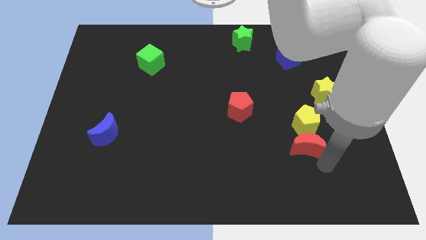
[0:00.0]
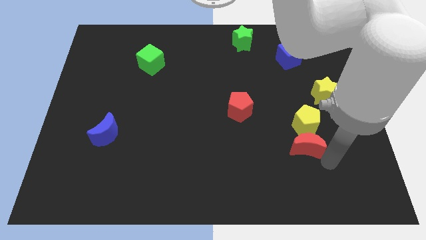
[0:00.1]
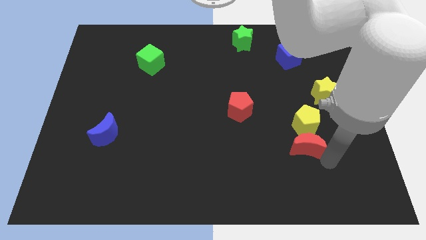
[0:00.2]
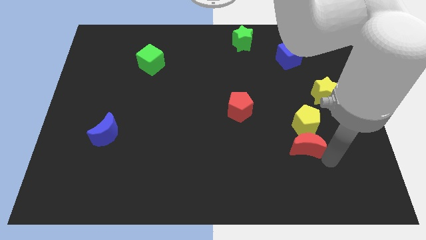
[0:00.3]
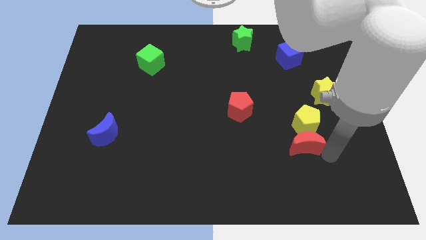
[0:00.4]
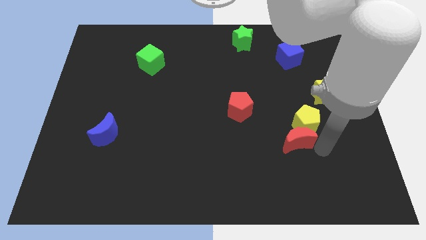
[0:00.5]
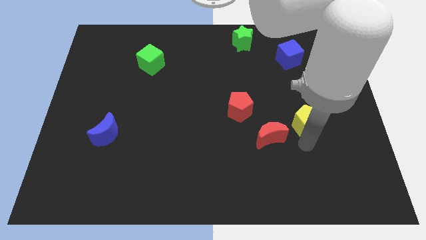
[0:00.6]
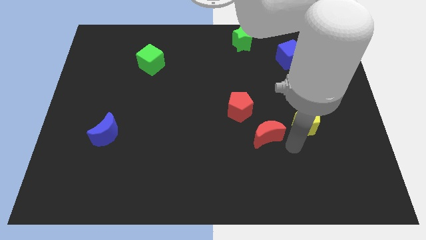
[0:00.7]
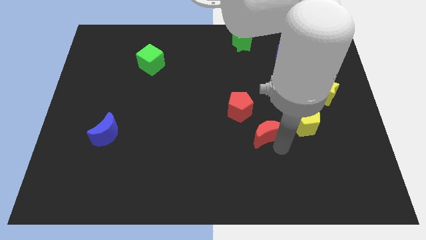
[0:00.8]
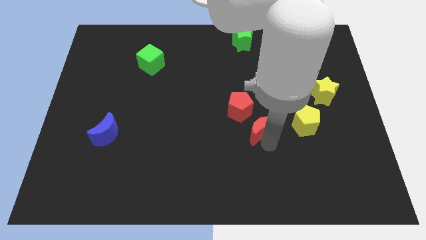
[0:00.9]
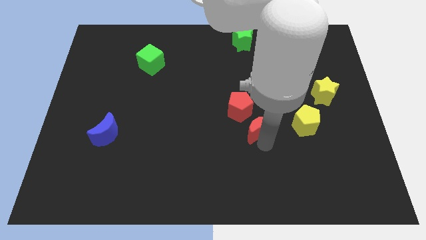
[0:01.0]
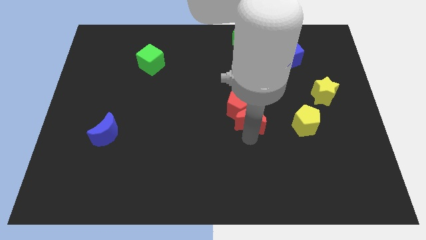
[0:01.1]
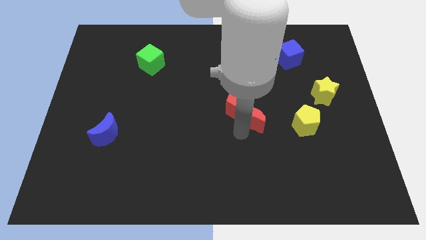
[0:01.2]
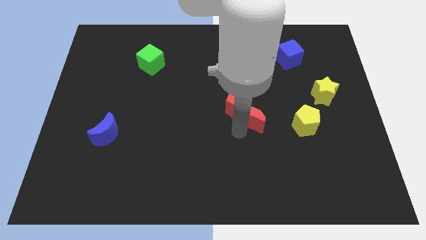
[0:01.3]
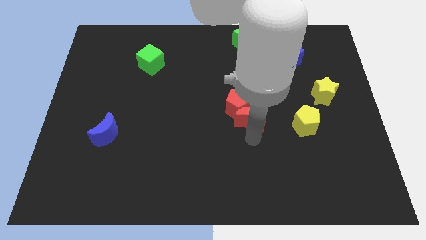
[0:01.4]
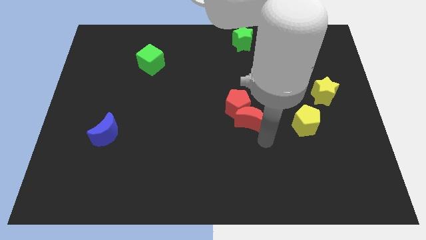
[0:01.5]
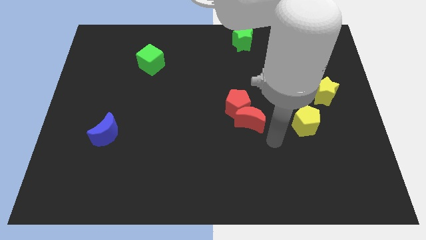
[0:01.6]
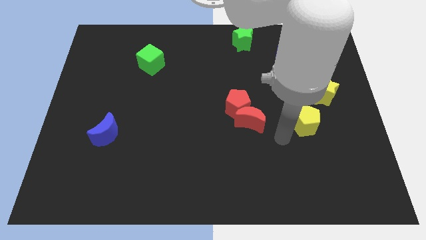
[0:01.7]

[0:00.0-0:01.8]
push the red moon below the red pentagon

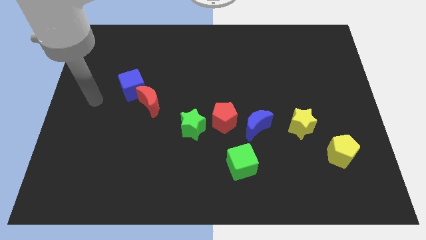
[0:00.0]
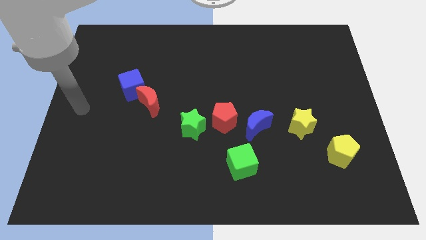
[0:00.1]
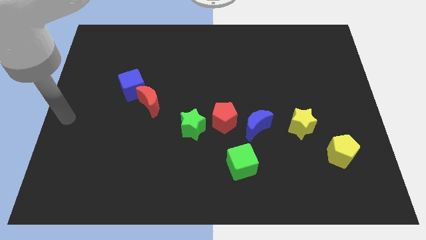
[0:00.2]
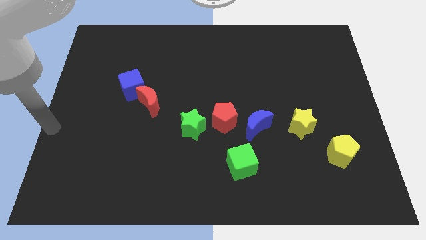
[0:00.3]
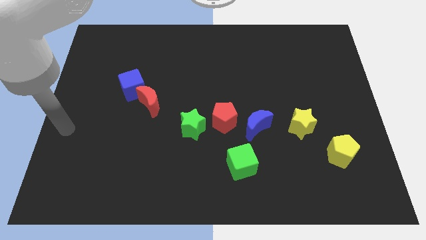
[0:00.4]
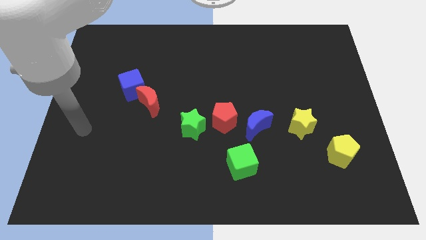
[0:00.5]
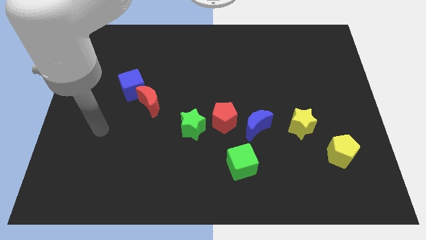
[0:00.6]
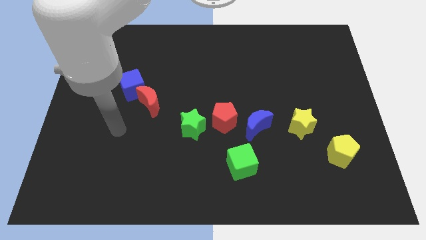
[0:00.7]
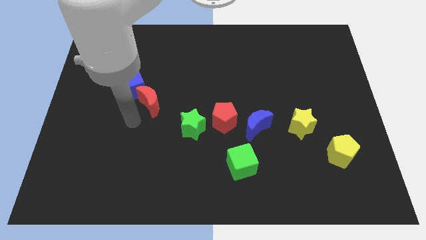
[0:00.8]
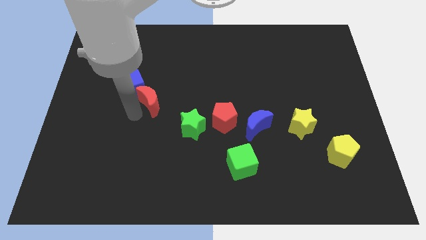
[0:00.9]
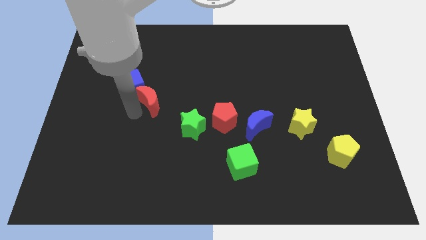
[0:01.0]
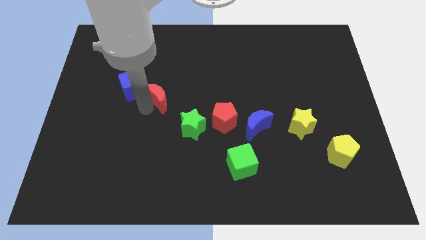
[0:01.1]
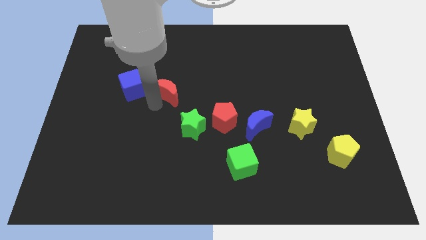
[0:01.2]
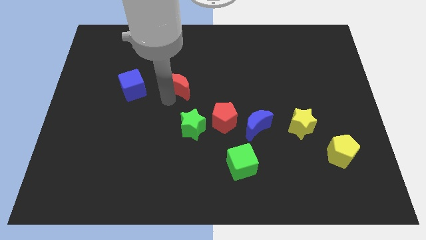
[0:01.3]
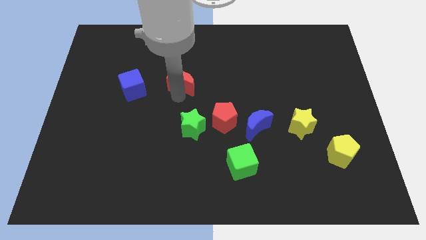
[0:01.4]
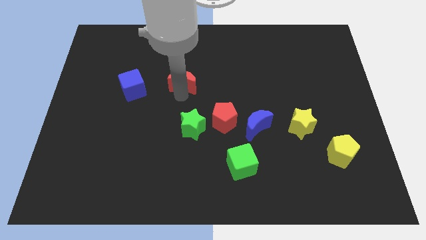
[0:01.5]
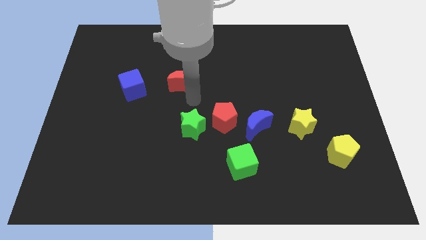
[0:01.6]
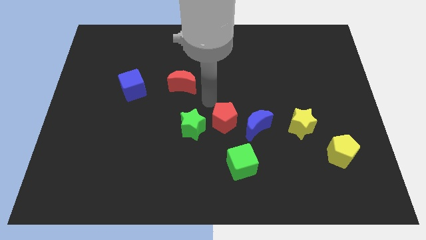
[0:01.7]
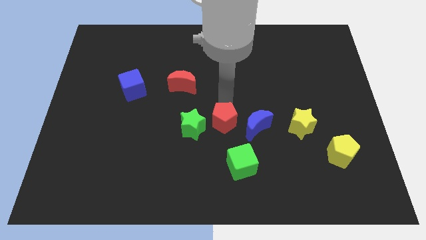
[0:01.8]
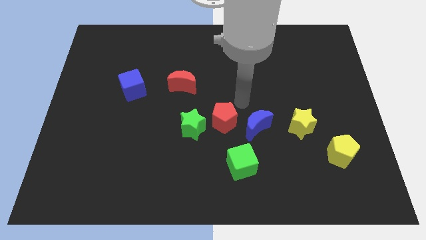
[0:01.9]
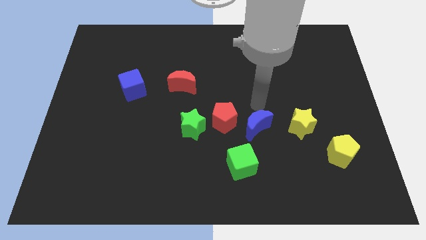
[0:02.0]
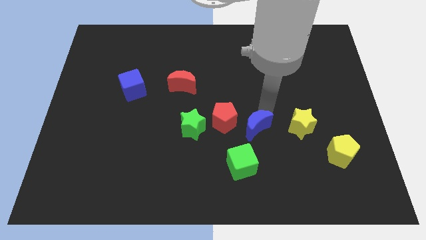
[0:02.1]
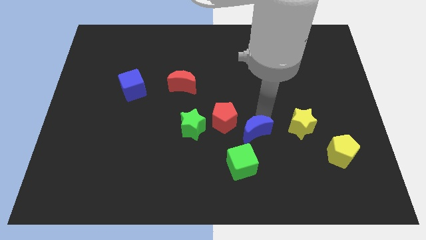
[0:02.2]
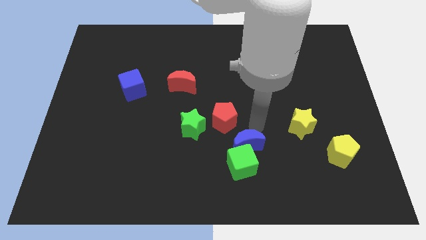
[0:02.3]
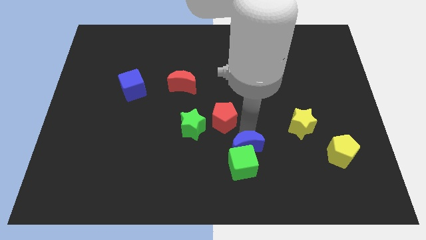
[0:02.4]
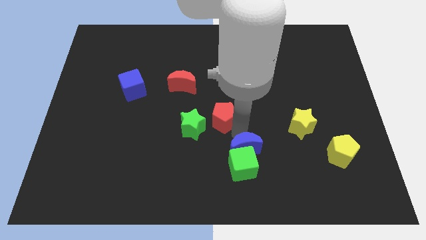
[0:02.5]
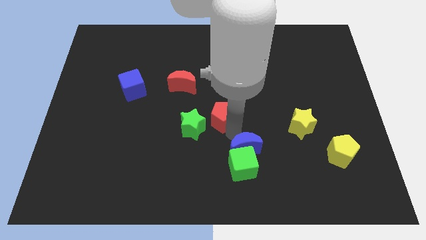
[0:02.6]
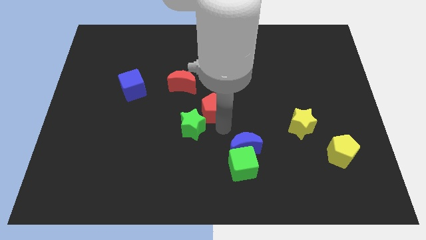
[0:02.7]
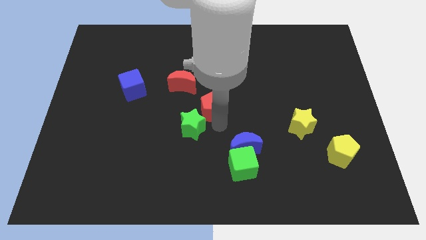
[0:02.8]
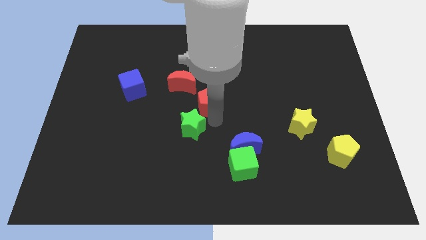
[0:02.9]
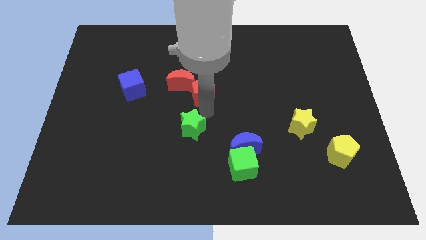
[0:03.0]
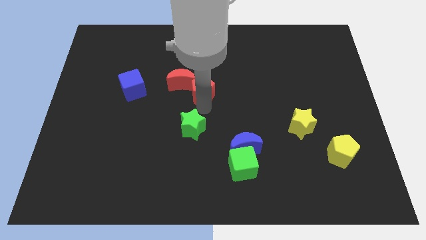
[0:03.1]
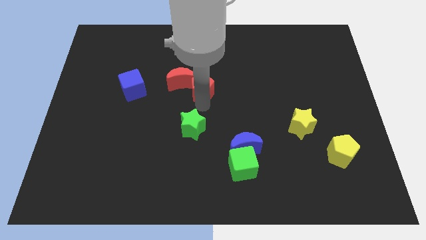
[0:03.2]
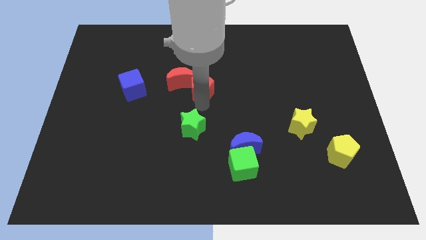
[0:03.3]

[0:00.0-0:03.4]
push red pentagon into red moon

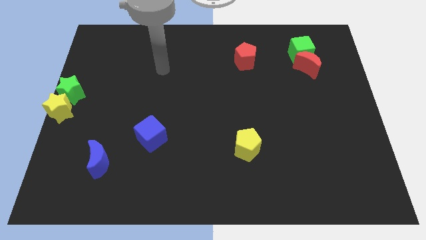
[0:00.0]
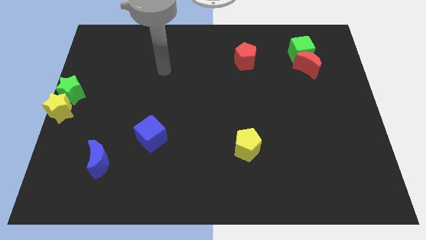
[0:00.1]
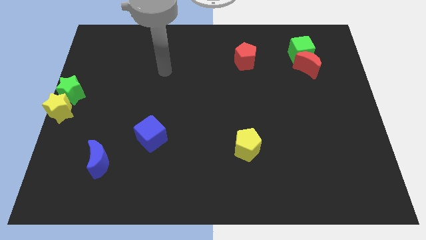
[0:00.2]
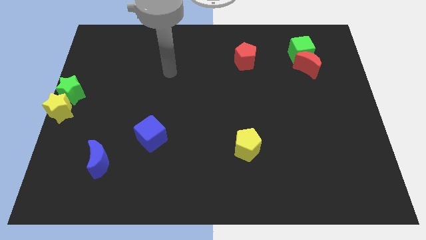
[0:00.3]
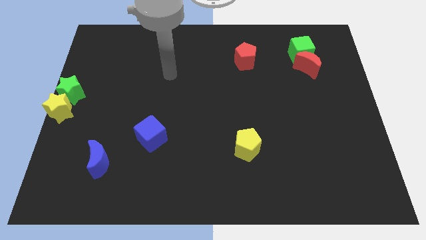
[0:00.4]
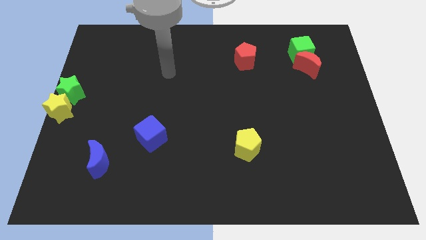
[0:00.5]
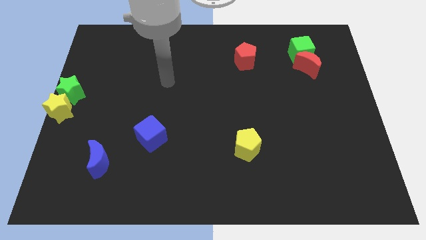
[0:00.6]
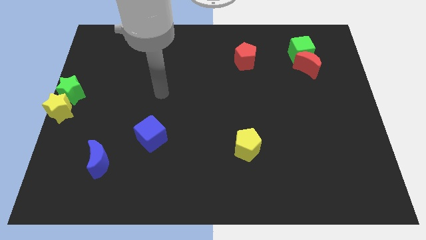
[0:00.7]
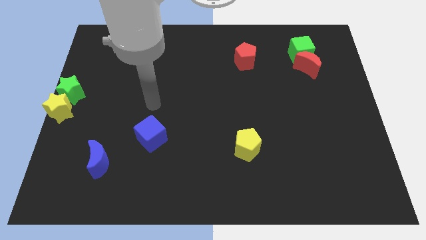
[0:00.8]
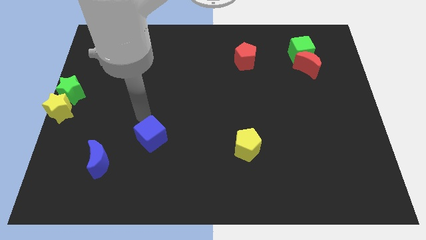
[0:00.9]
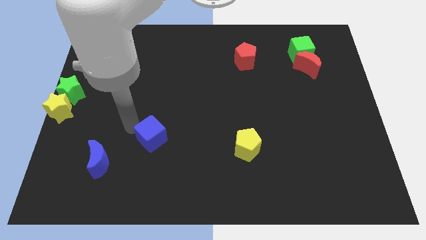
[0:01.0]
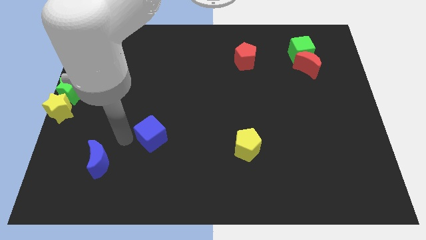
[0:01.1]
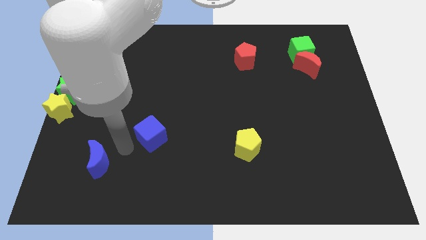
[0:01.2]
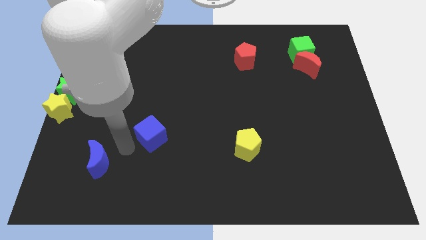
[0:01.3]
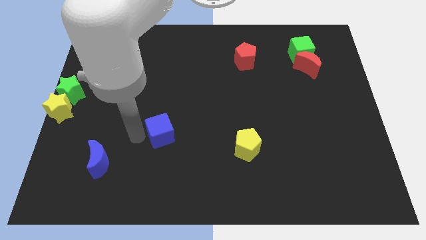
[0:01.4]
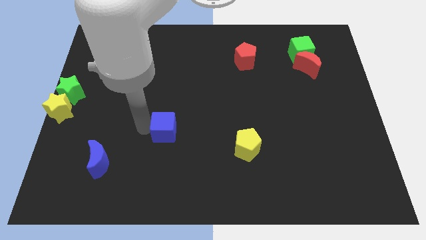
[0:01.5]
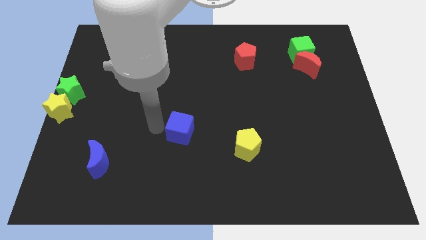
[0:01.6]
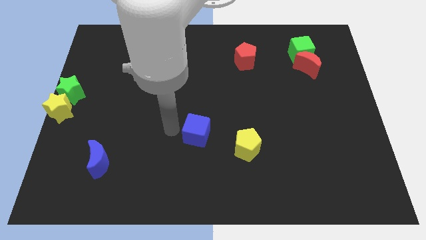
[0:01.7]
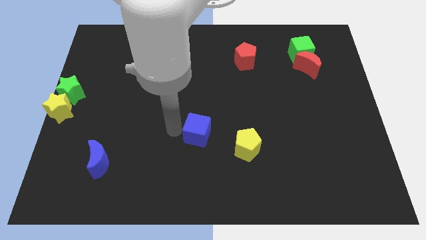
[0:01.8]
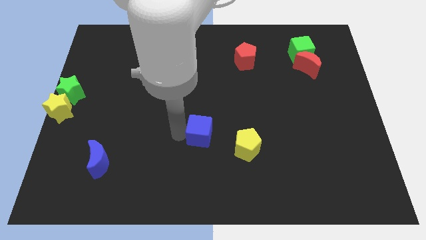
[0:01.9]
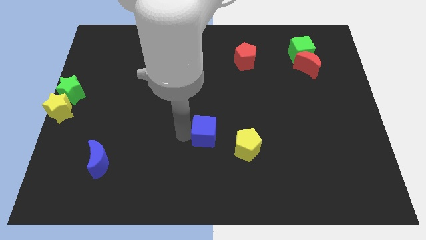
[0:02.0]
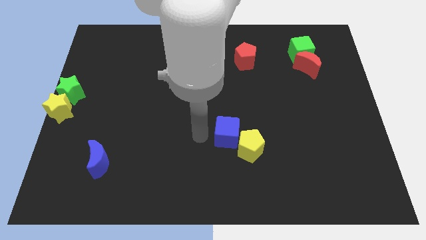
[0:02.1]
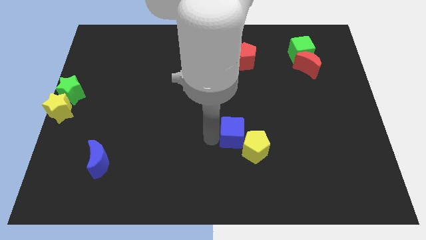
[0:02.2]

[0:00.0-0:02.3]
push the blue cube into the yellow pentagon

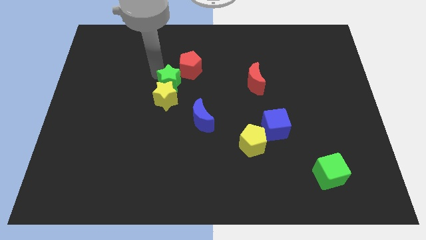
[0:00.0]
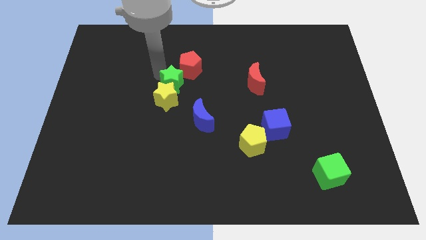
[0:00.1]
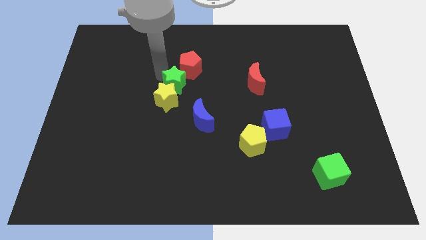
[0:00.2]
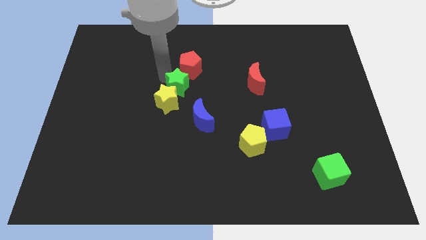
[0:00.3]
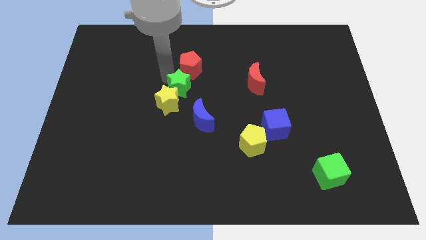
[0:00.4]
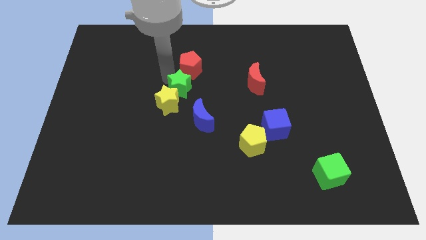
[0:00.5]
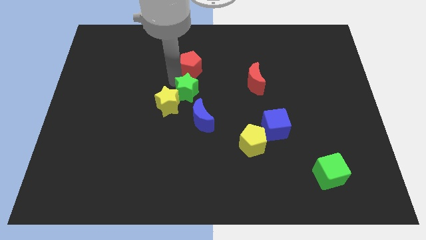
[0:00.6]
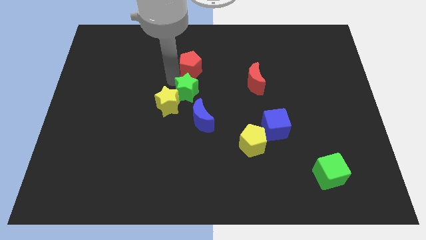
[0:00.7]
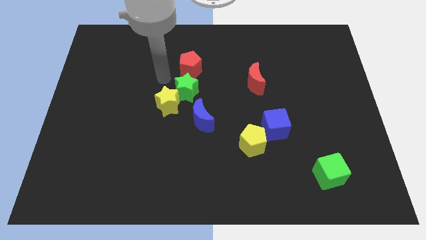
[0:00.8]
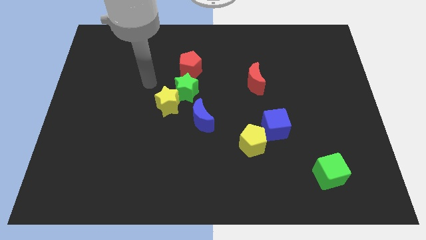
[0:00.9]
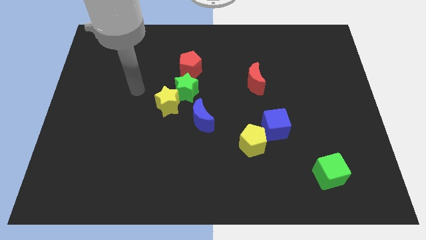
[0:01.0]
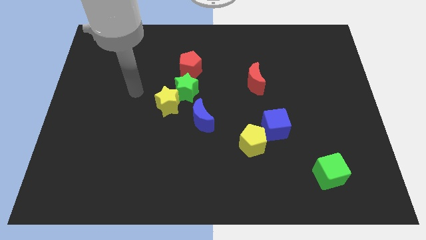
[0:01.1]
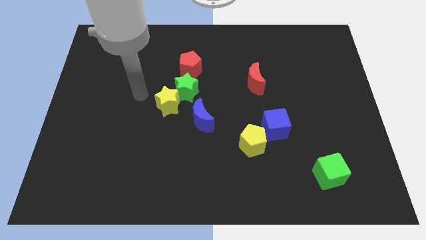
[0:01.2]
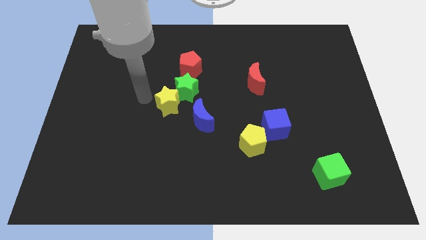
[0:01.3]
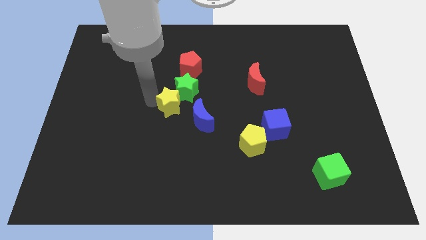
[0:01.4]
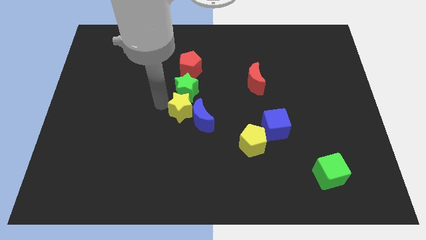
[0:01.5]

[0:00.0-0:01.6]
move the green star to the top right side of the yellow star
